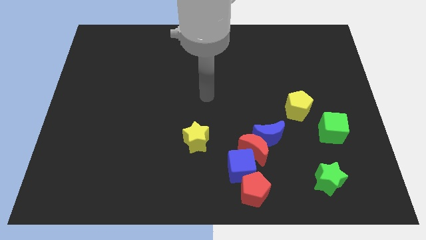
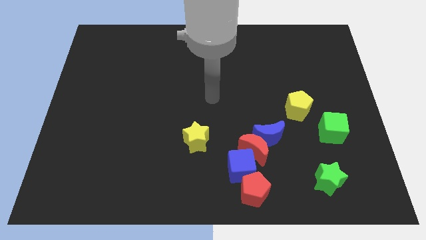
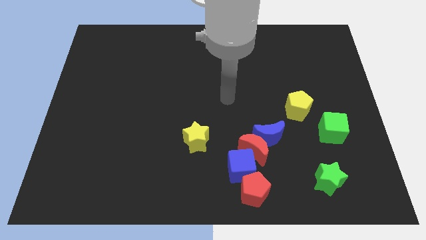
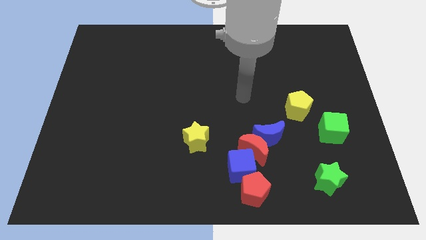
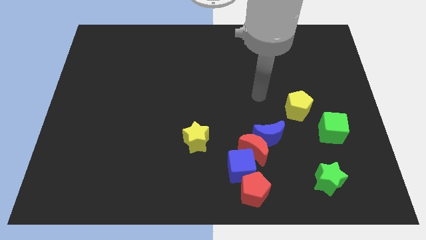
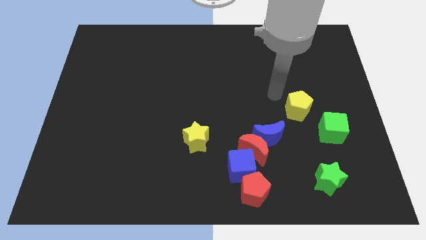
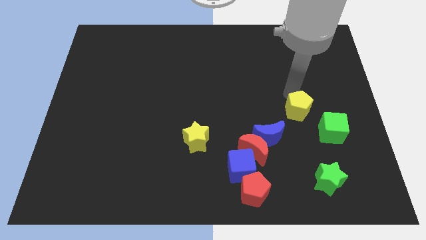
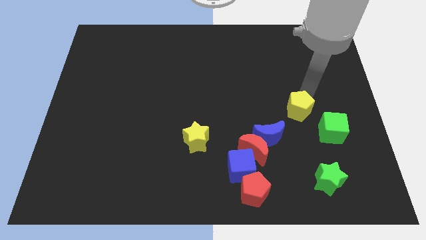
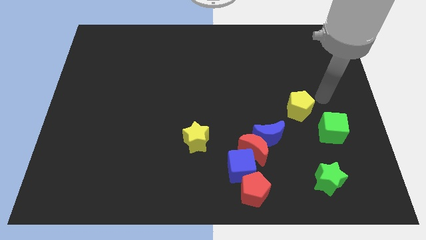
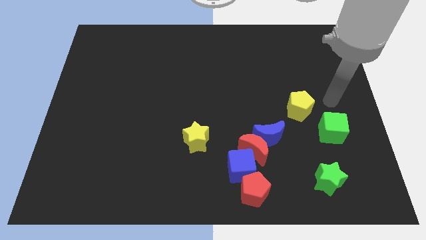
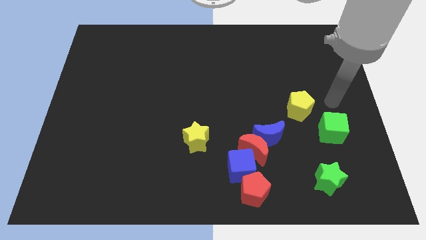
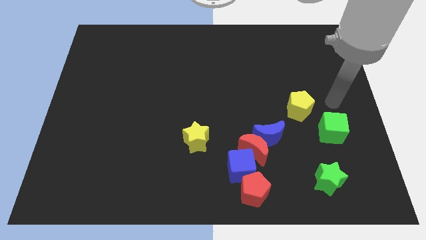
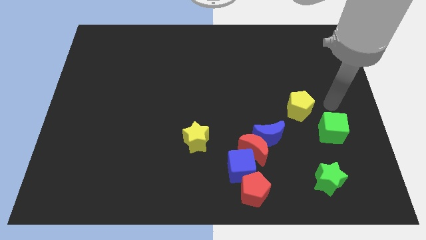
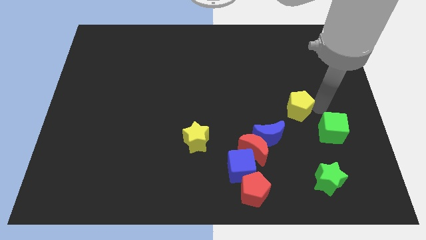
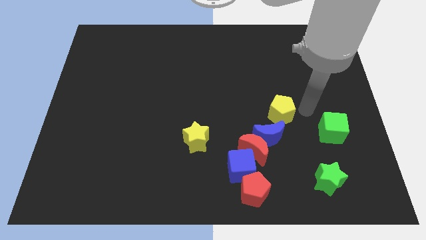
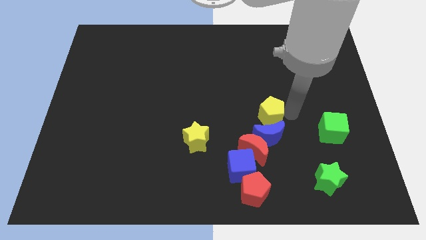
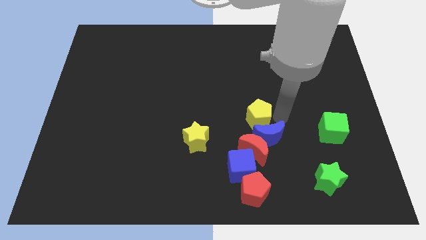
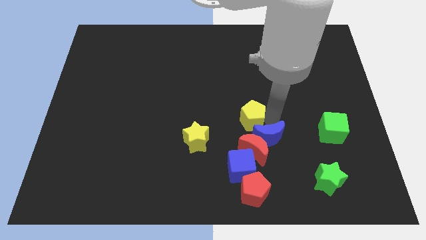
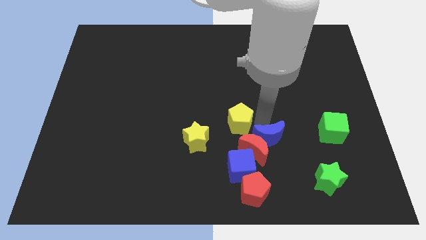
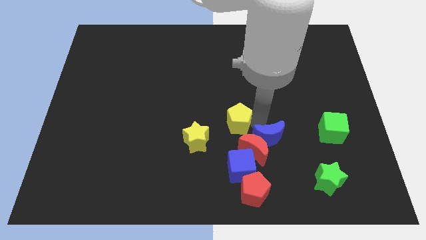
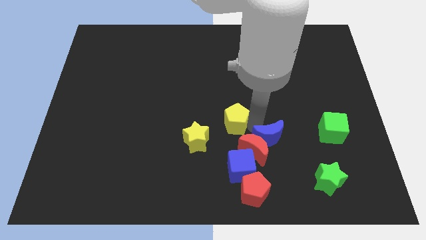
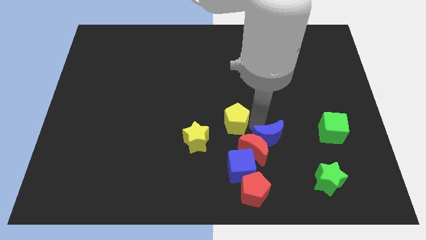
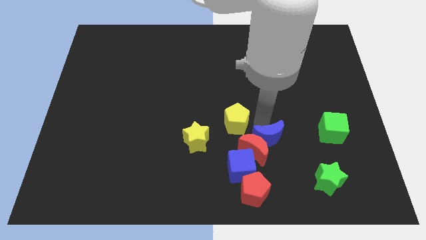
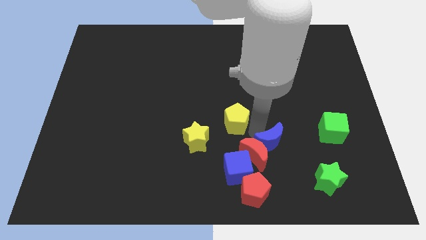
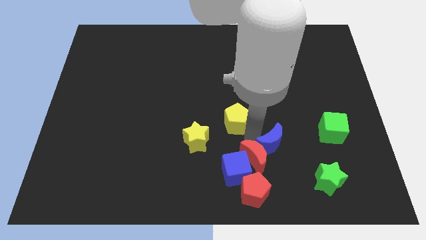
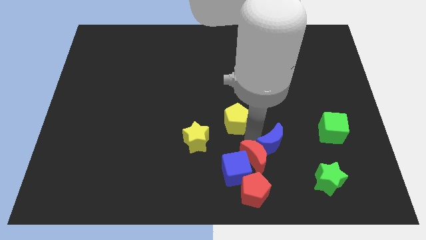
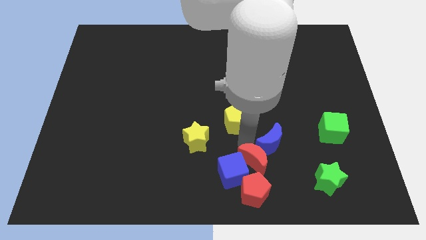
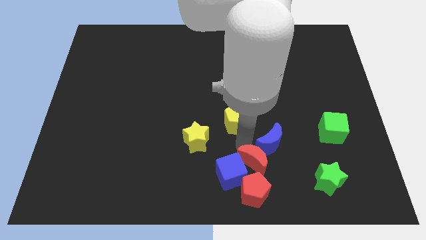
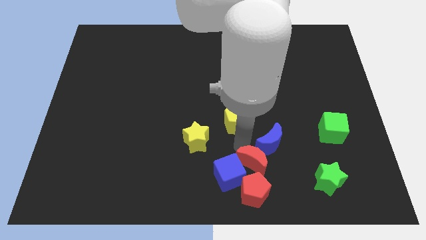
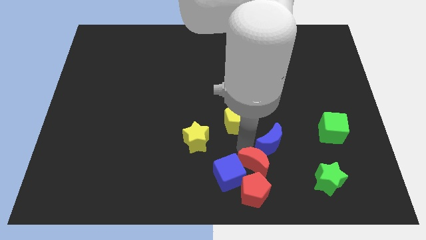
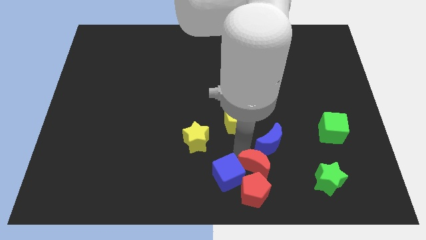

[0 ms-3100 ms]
move the yellow pentagon towards the top right of the yellow star and go away

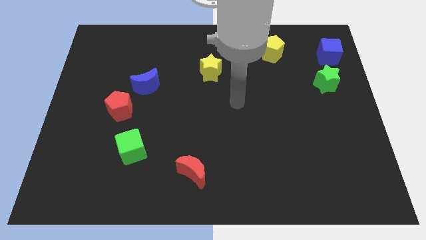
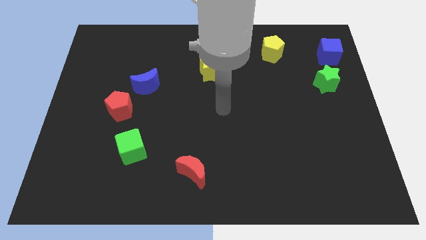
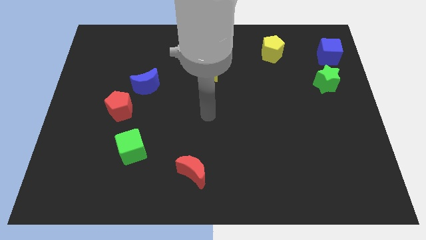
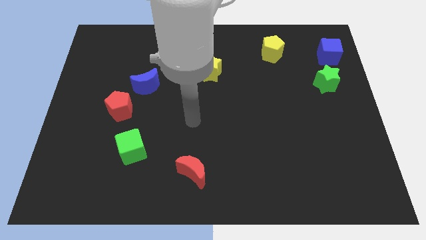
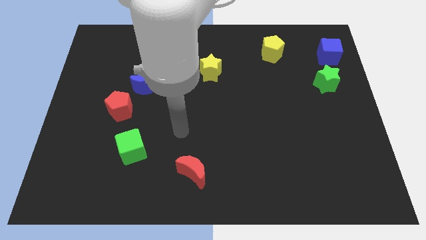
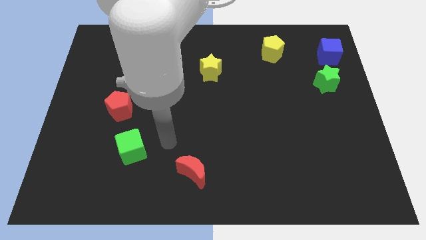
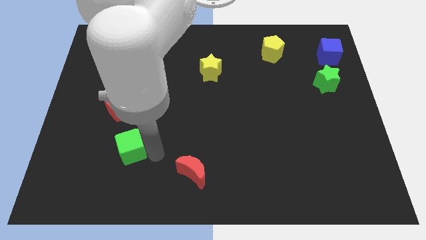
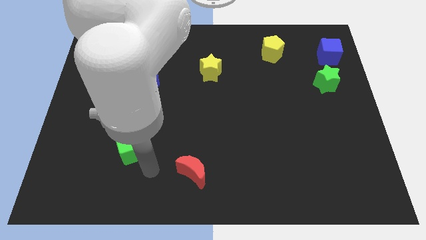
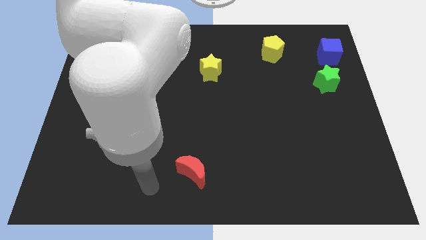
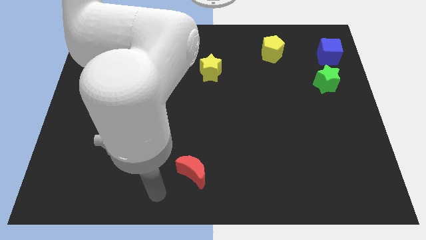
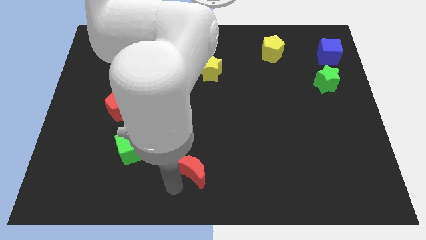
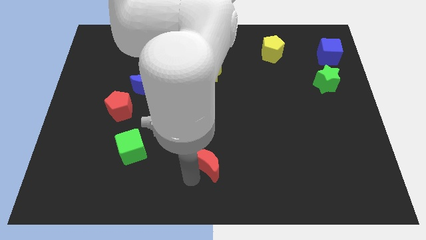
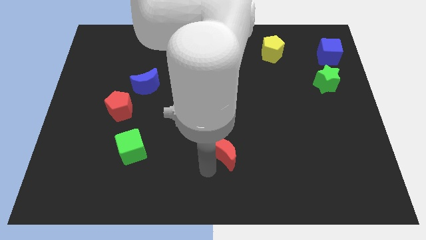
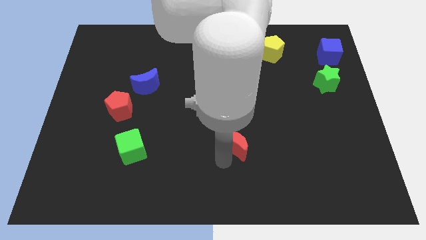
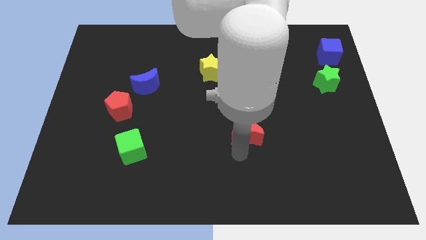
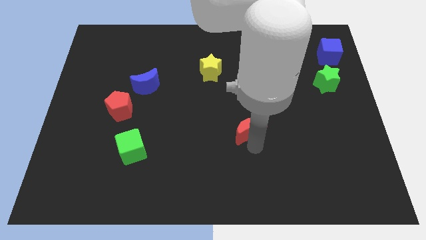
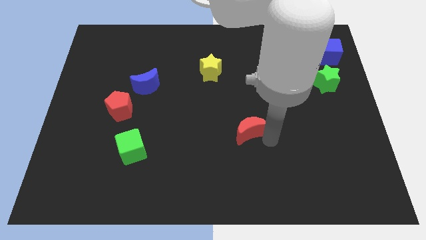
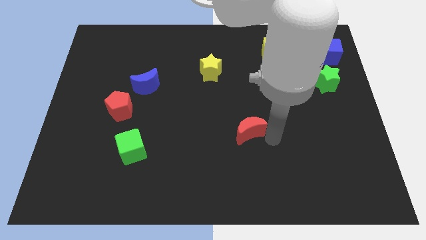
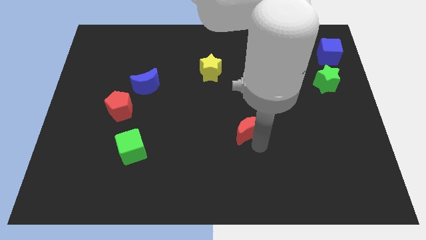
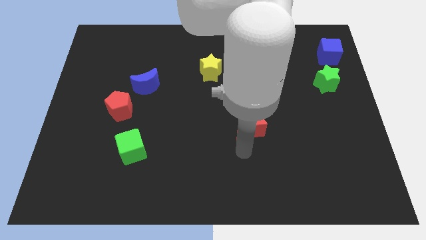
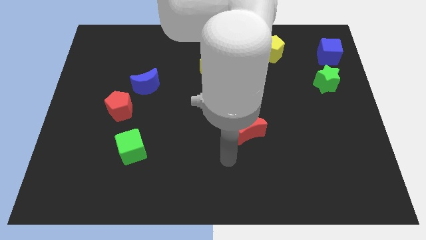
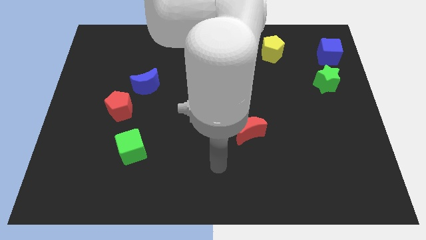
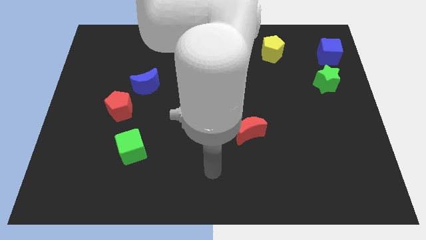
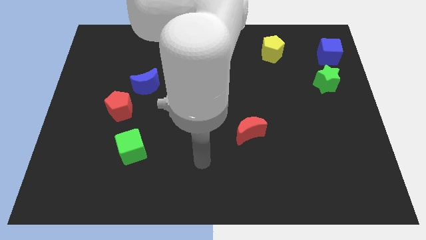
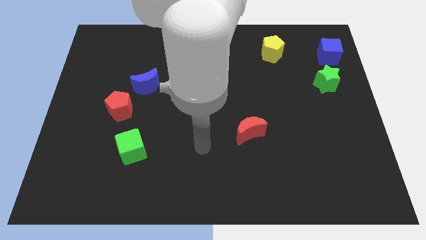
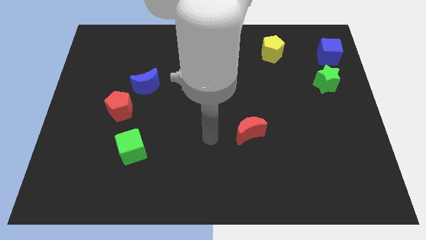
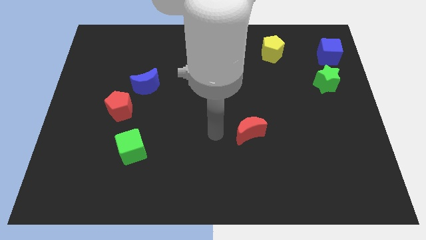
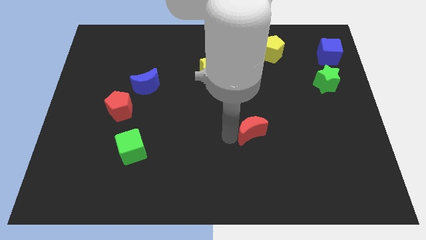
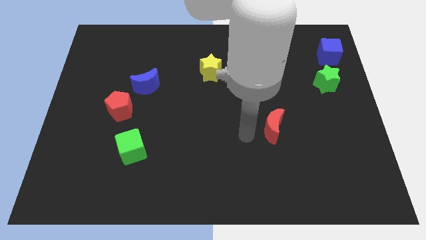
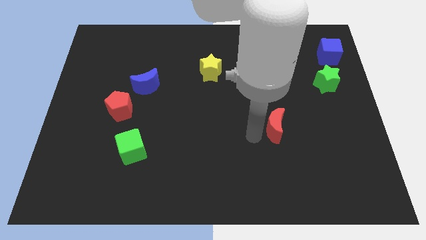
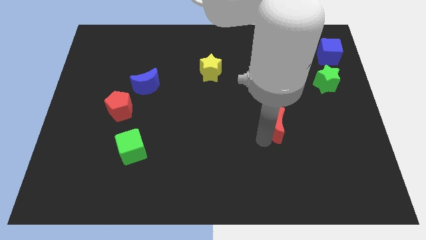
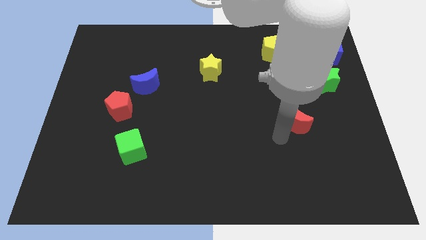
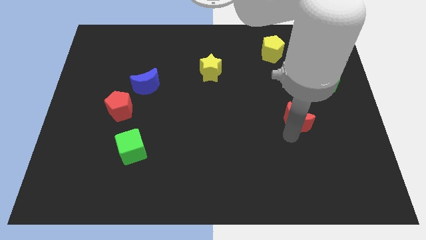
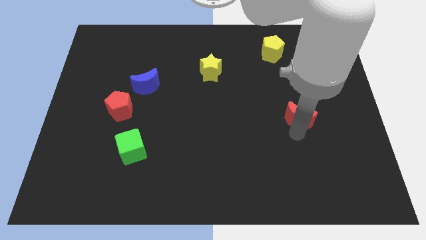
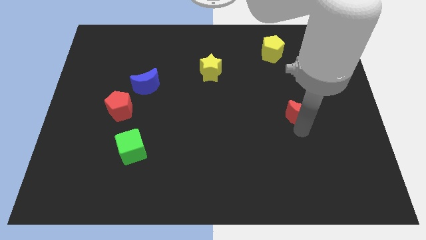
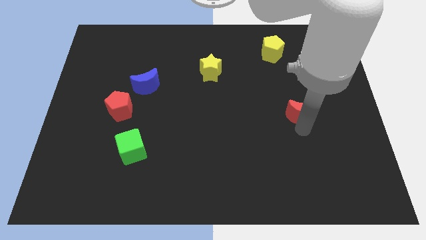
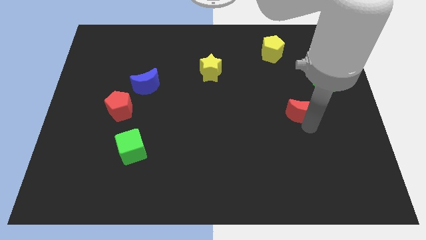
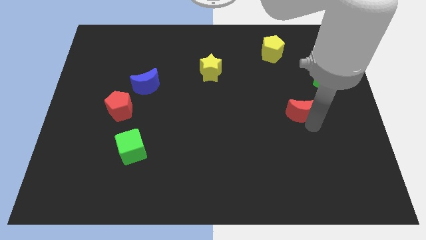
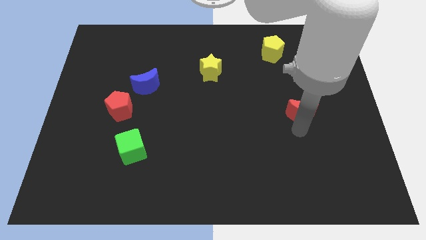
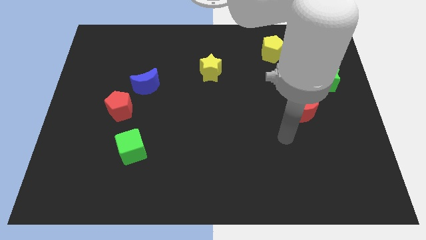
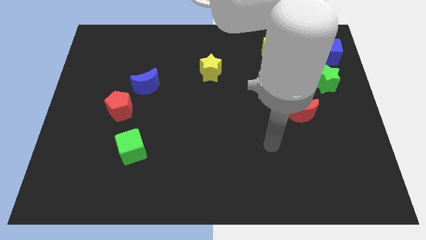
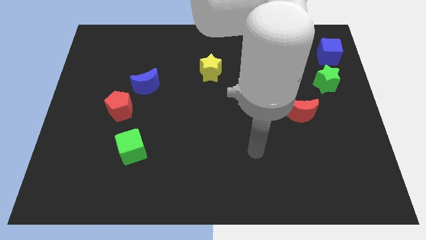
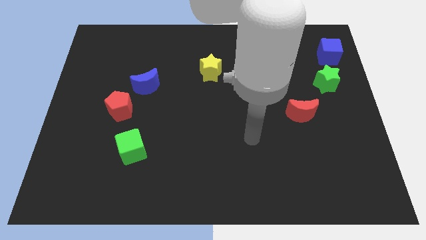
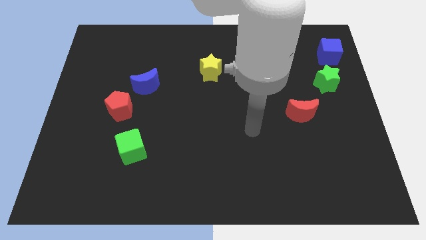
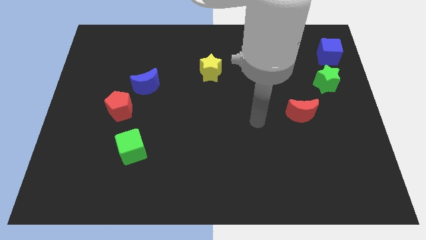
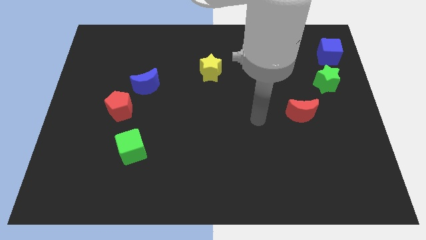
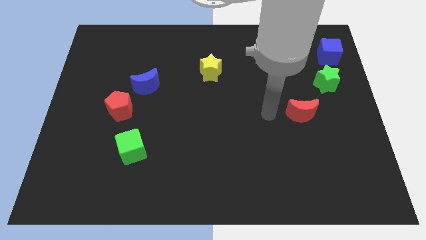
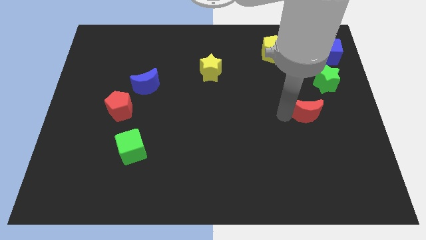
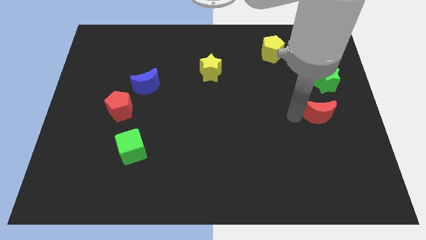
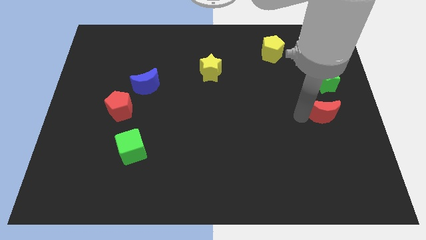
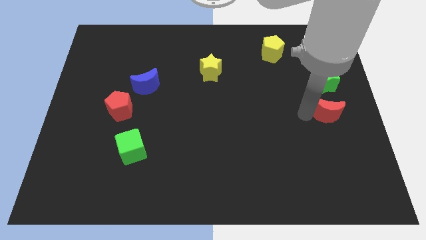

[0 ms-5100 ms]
drag the red moon to the bottom side of the green star

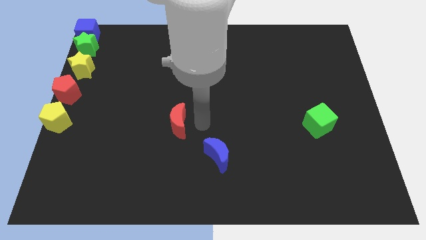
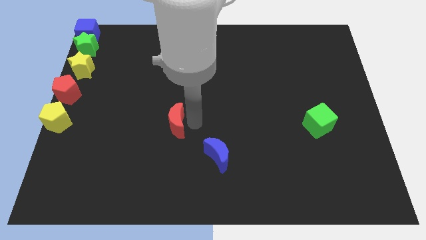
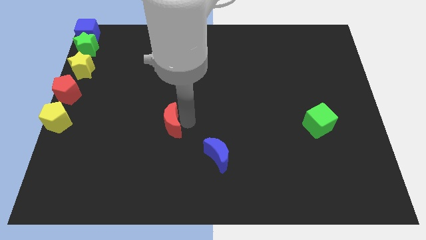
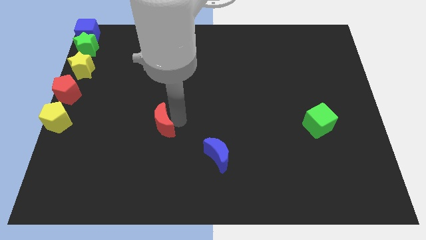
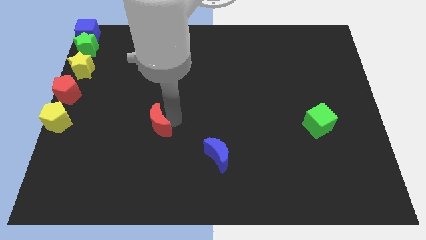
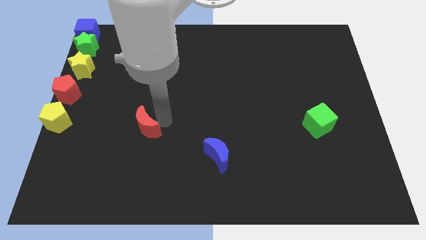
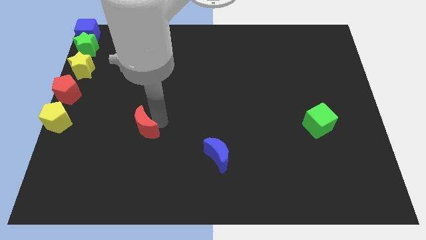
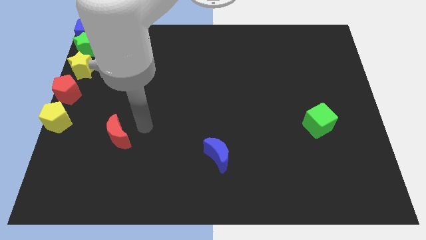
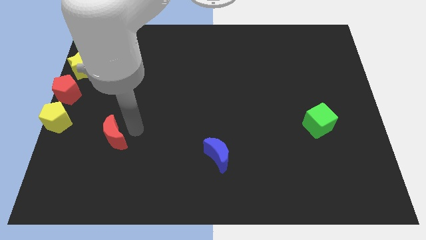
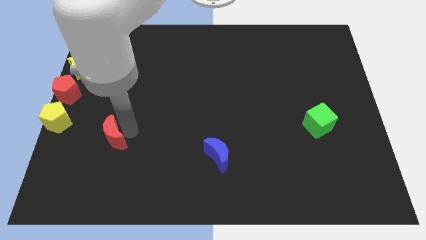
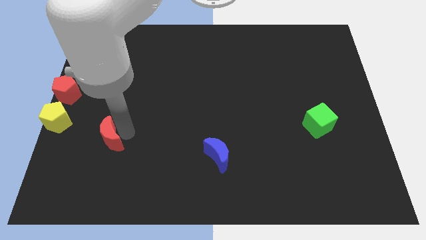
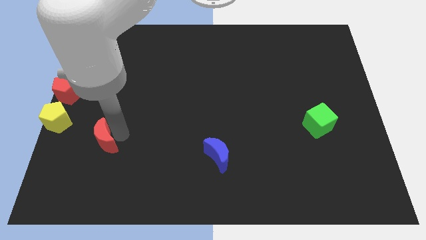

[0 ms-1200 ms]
place the red moon in between the yellow pentagon and blue moon
